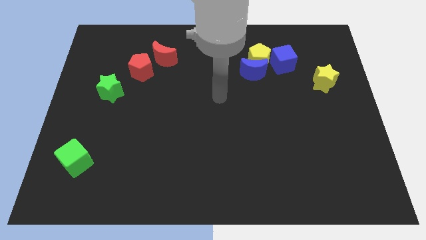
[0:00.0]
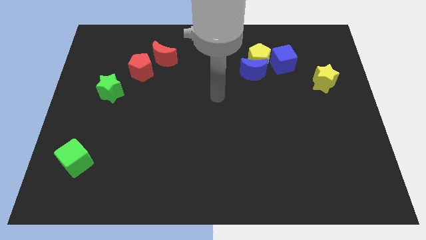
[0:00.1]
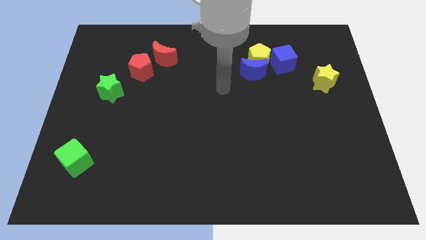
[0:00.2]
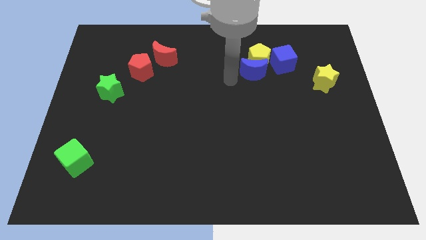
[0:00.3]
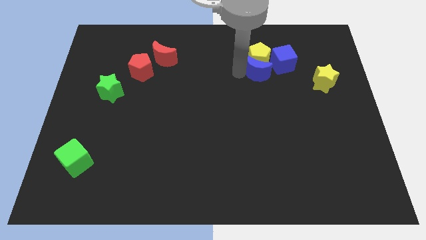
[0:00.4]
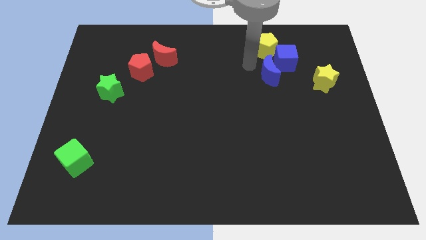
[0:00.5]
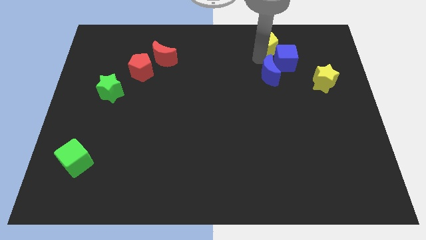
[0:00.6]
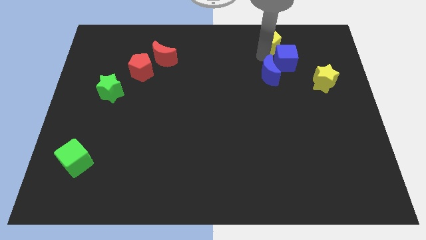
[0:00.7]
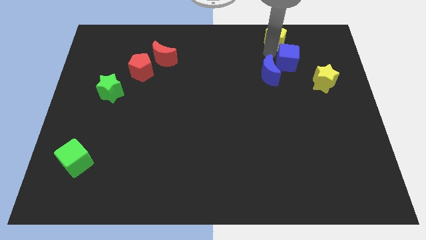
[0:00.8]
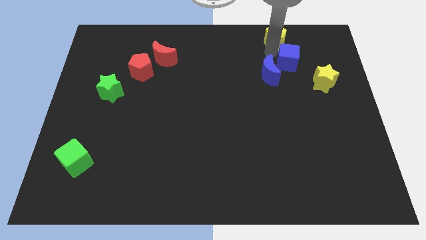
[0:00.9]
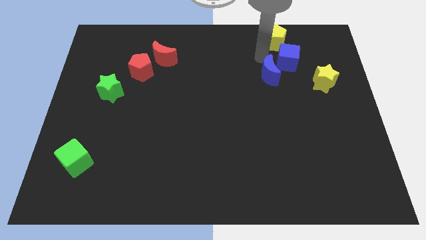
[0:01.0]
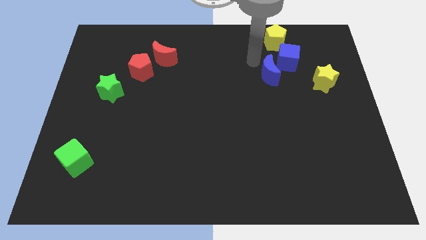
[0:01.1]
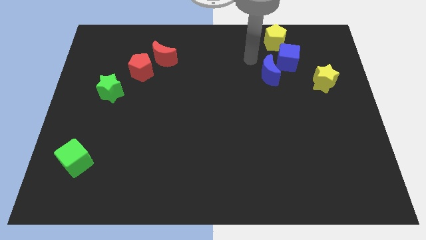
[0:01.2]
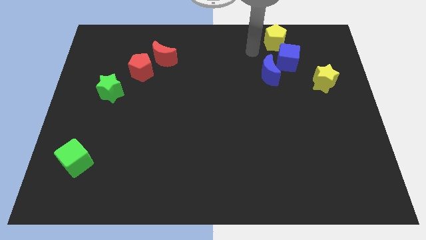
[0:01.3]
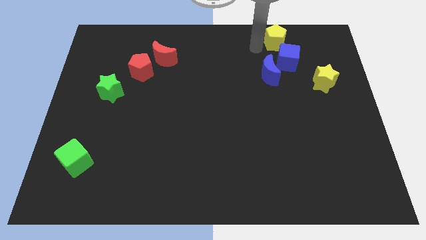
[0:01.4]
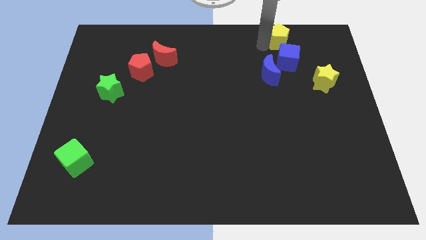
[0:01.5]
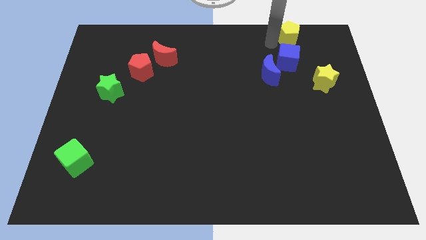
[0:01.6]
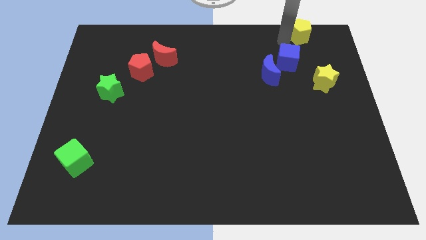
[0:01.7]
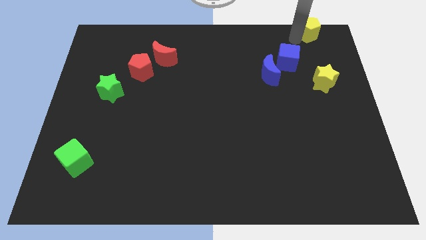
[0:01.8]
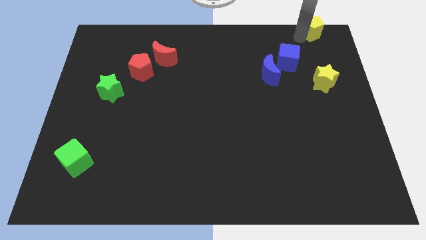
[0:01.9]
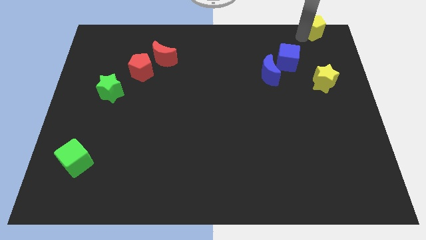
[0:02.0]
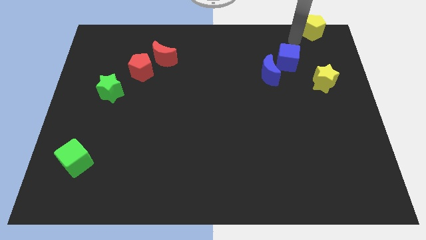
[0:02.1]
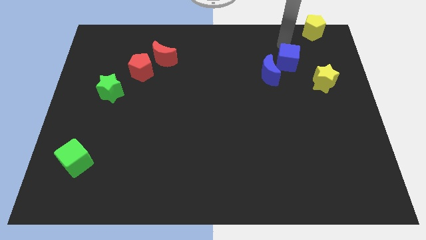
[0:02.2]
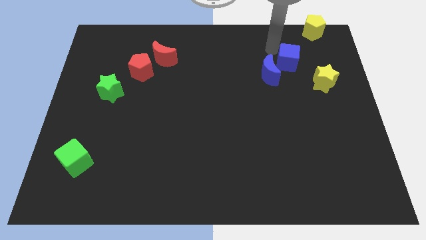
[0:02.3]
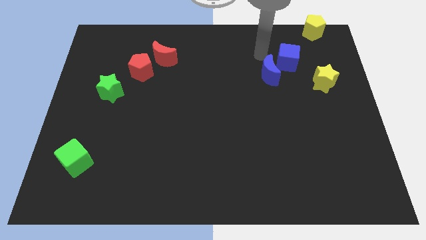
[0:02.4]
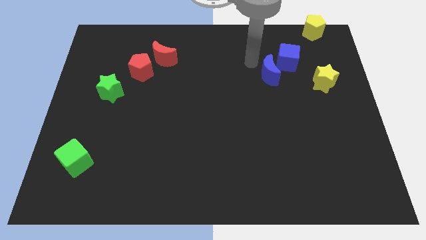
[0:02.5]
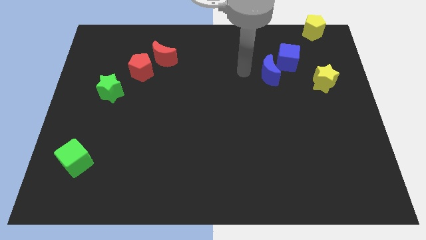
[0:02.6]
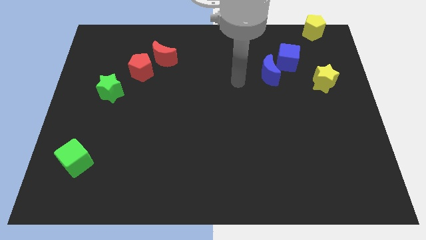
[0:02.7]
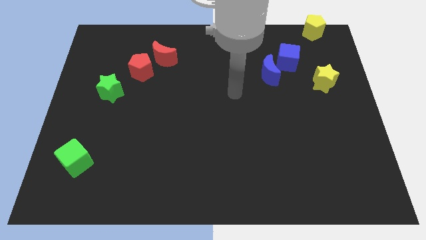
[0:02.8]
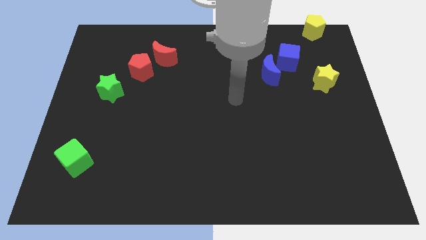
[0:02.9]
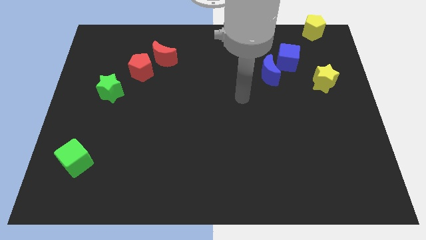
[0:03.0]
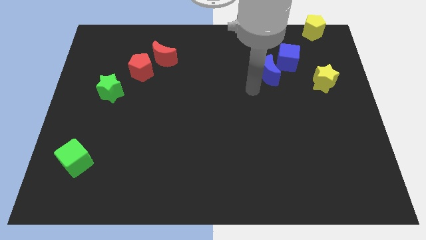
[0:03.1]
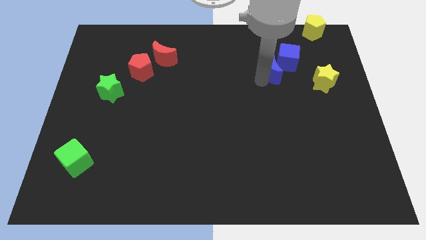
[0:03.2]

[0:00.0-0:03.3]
separate yellow pentagon from blue blocks

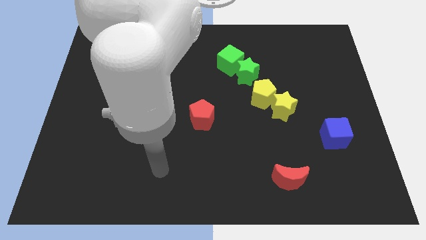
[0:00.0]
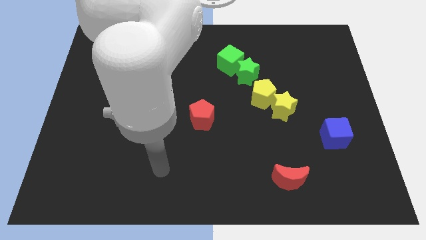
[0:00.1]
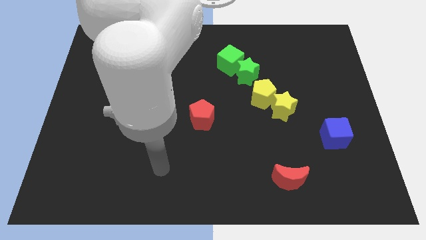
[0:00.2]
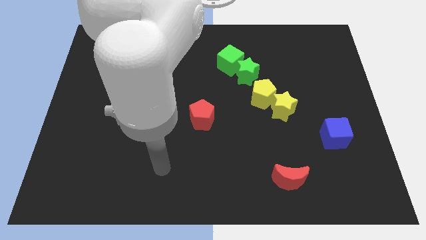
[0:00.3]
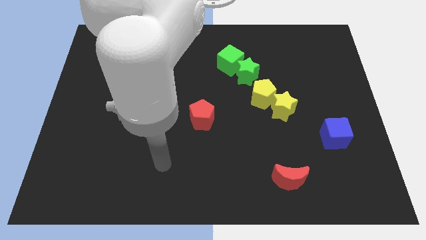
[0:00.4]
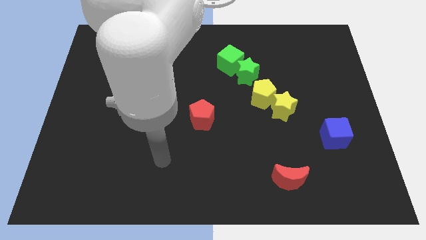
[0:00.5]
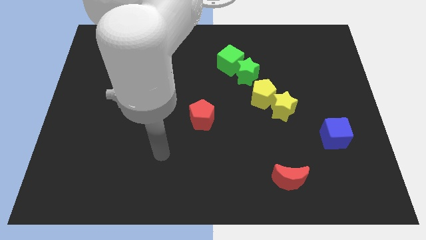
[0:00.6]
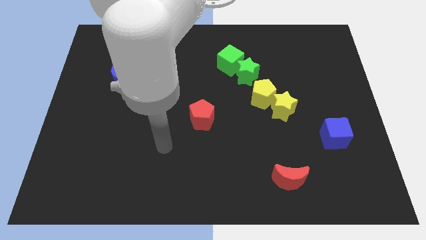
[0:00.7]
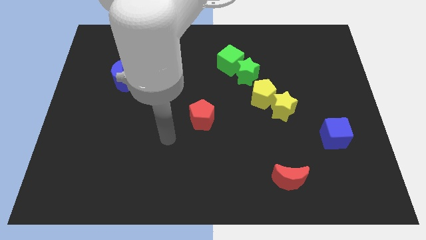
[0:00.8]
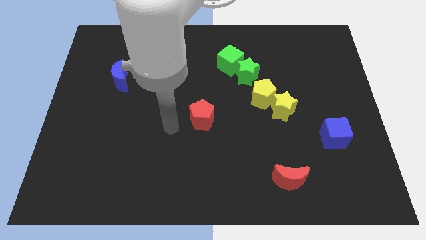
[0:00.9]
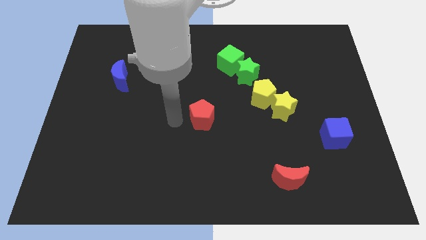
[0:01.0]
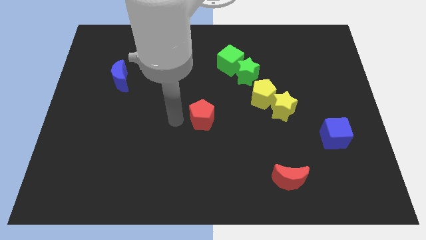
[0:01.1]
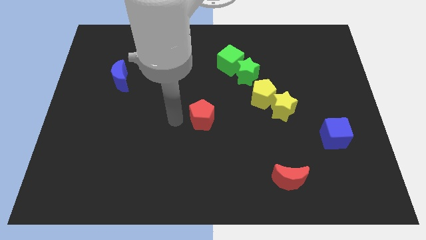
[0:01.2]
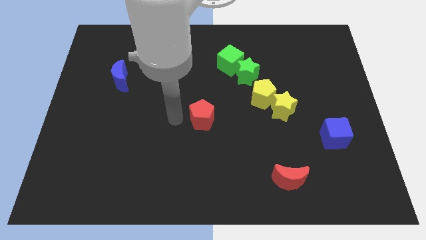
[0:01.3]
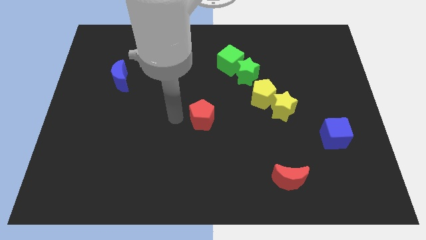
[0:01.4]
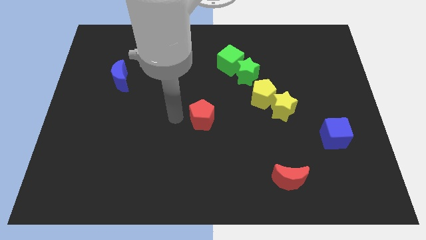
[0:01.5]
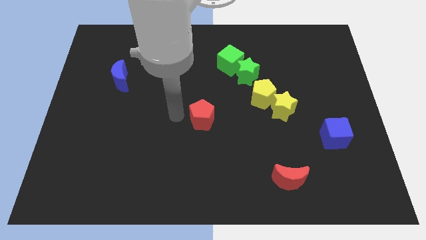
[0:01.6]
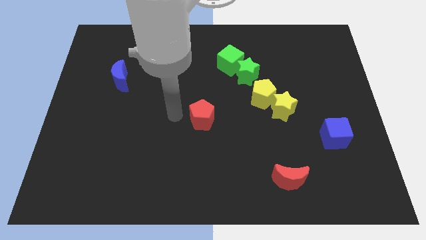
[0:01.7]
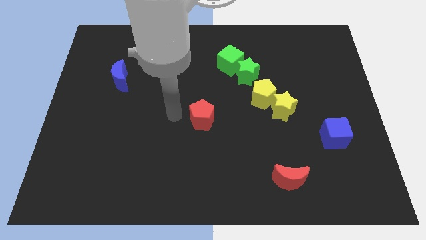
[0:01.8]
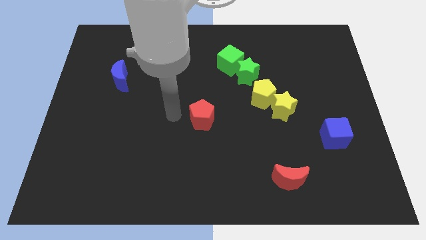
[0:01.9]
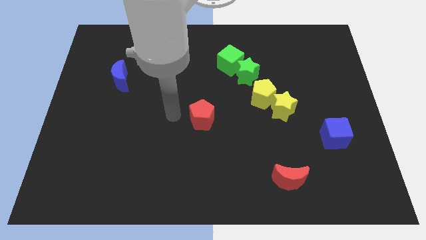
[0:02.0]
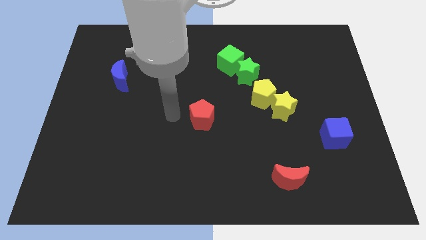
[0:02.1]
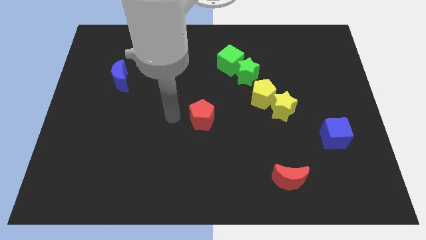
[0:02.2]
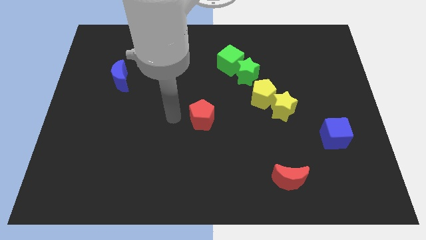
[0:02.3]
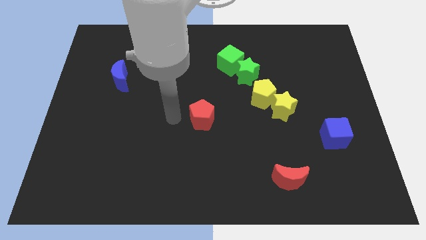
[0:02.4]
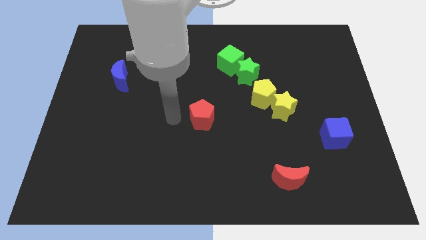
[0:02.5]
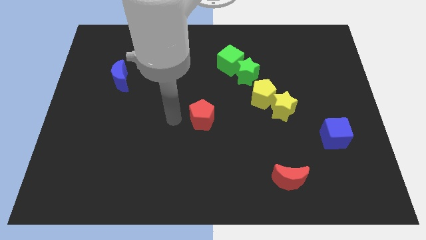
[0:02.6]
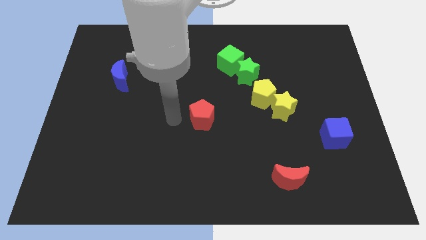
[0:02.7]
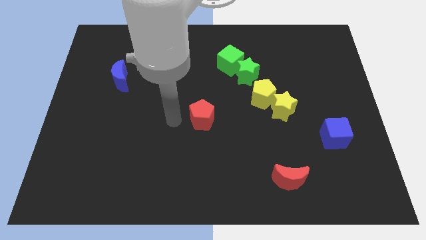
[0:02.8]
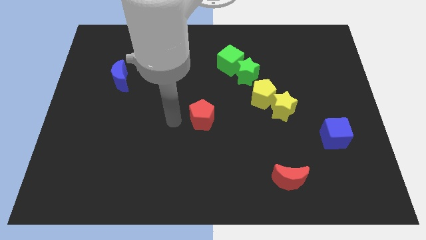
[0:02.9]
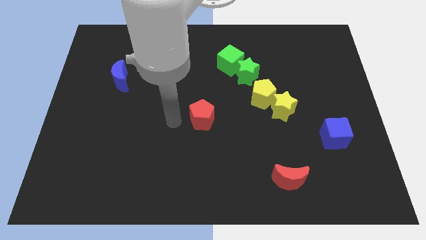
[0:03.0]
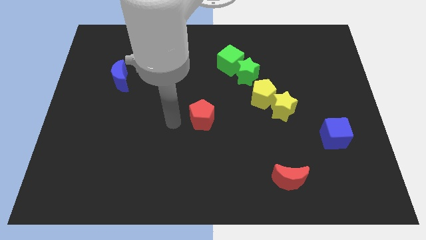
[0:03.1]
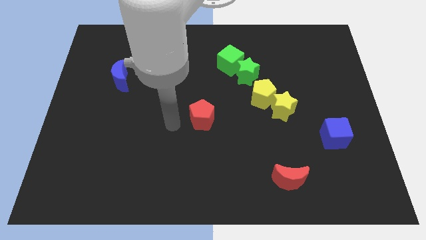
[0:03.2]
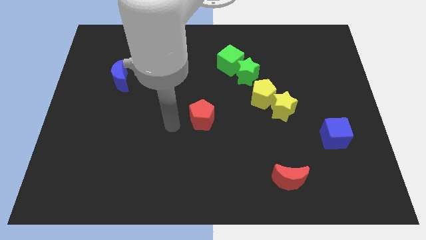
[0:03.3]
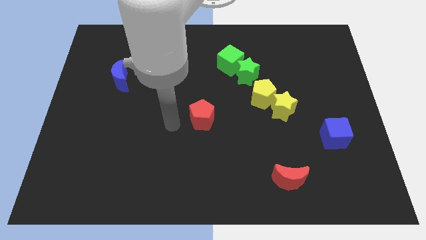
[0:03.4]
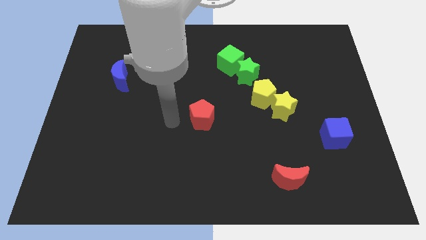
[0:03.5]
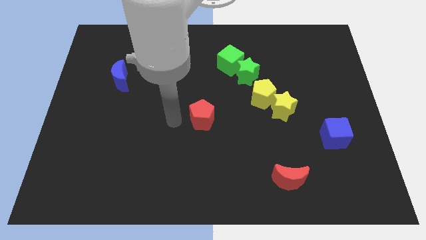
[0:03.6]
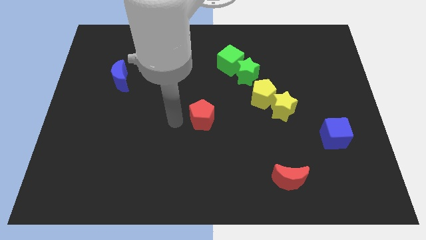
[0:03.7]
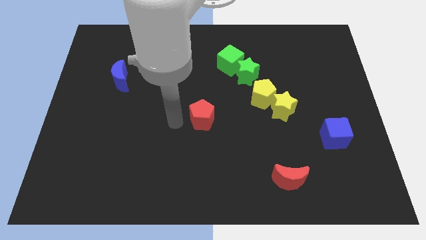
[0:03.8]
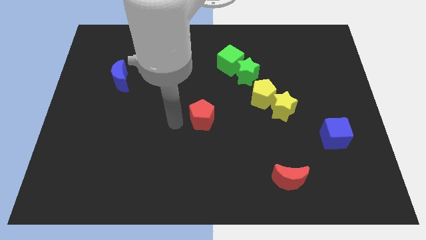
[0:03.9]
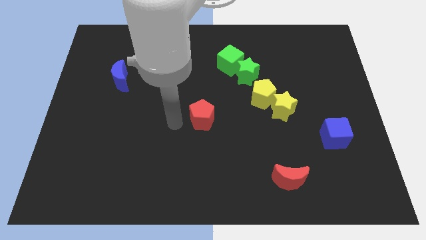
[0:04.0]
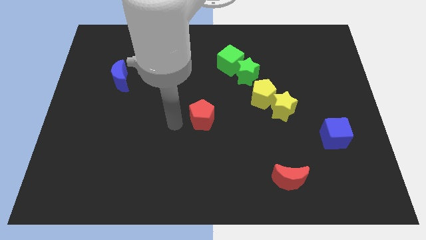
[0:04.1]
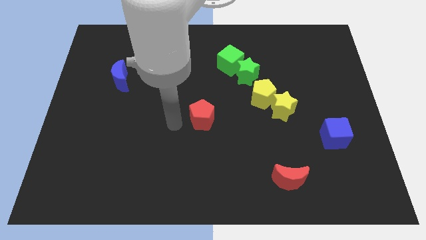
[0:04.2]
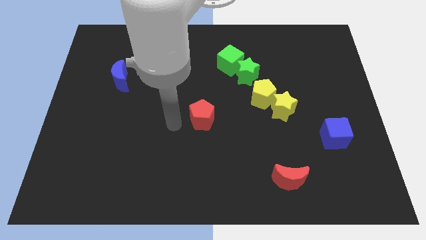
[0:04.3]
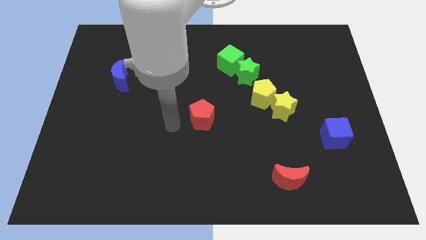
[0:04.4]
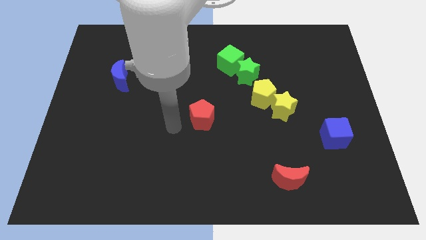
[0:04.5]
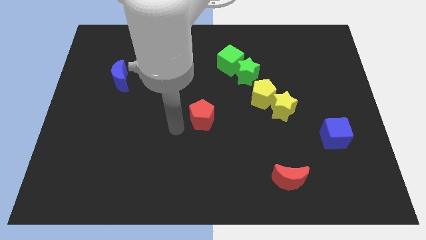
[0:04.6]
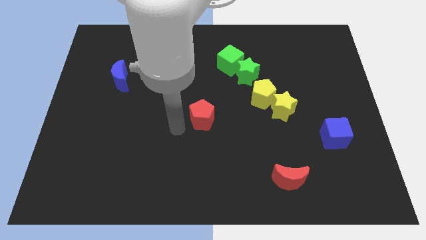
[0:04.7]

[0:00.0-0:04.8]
point your hand at the bottom left side of the red pentagon

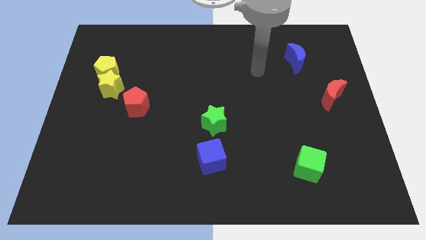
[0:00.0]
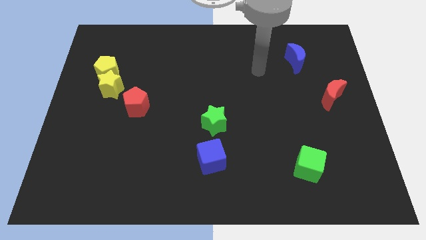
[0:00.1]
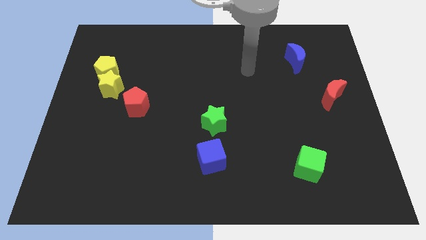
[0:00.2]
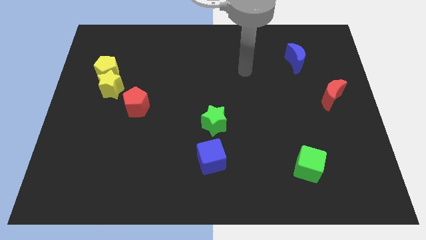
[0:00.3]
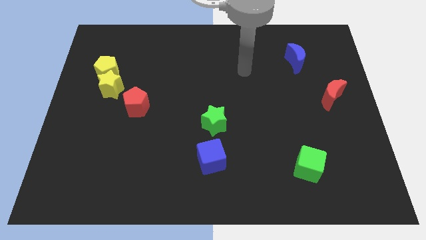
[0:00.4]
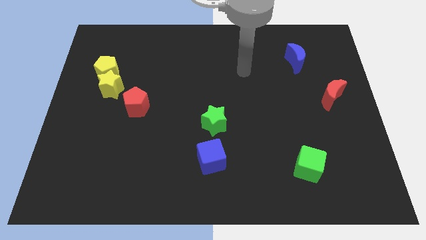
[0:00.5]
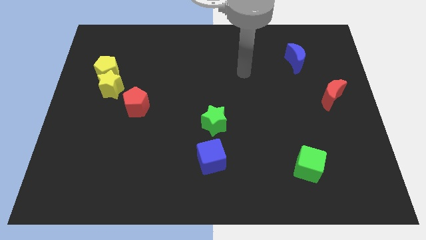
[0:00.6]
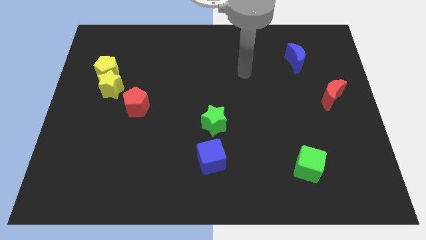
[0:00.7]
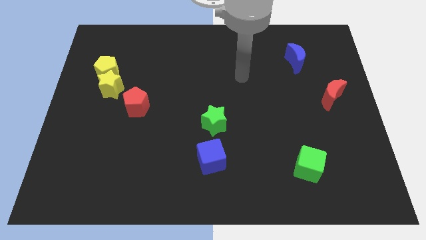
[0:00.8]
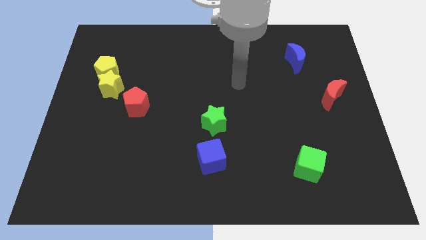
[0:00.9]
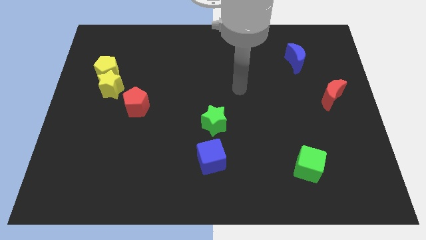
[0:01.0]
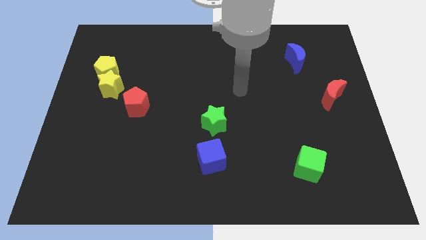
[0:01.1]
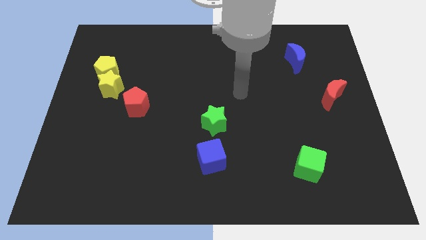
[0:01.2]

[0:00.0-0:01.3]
move your arm towards the bottom side
